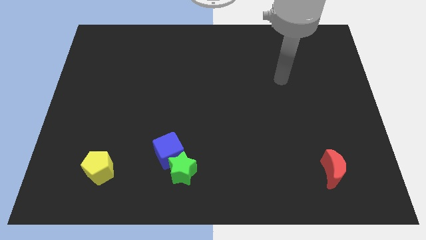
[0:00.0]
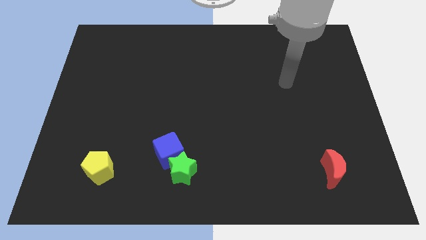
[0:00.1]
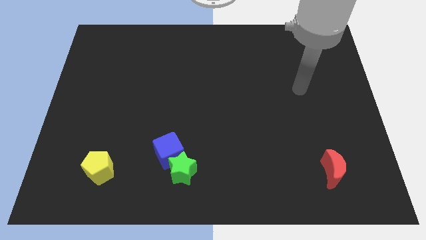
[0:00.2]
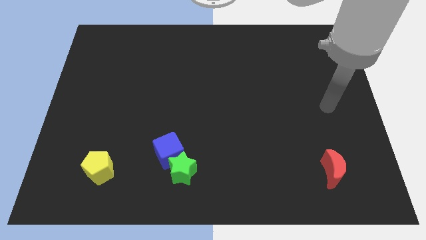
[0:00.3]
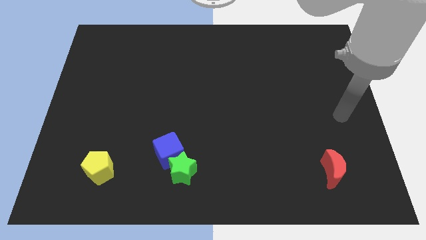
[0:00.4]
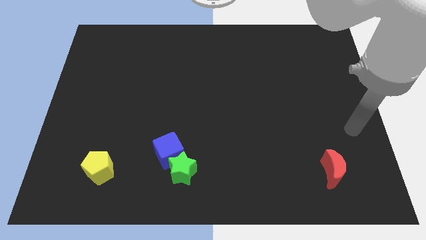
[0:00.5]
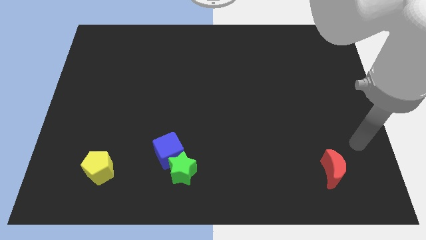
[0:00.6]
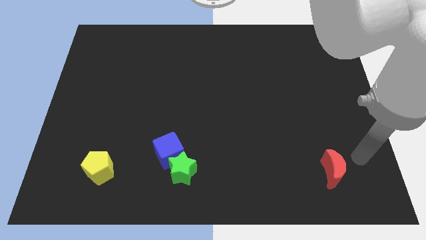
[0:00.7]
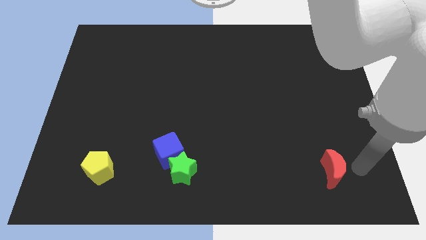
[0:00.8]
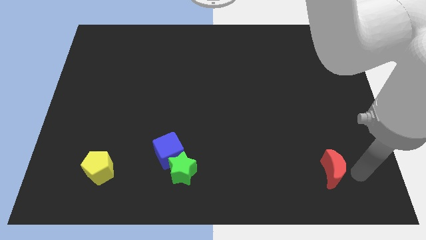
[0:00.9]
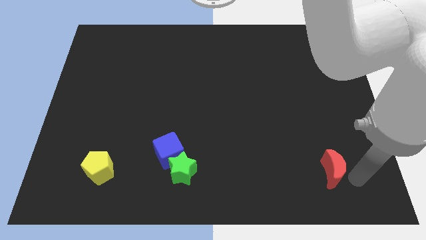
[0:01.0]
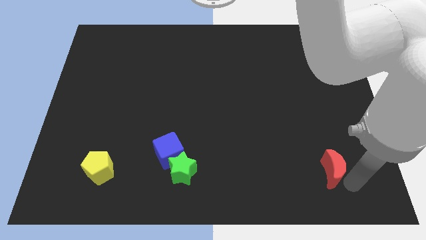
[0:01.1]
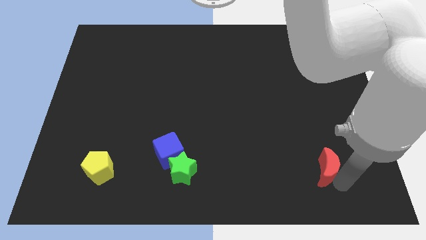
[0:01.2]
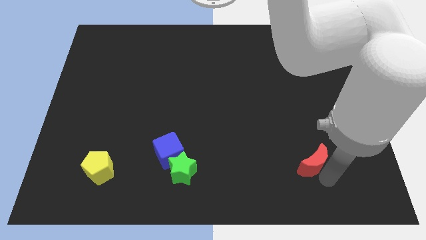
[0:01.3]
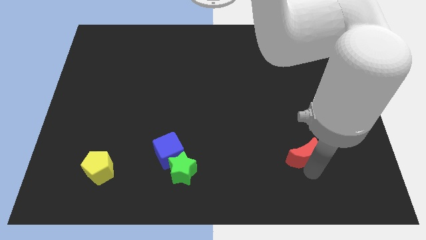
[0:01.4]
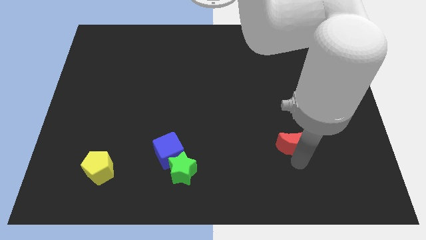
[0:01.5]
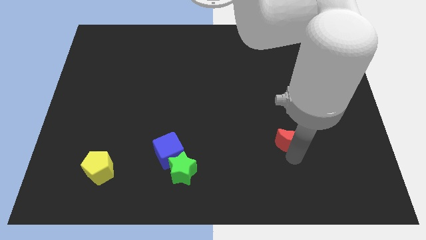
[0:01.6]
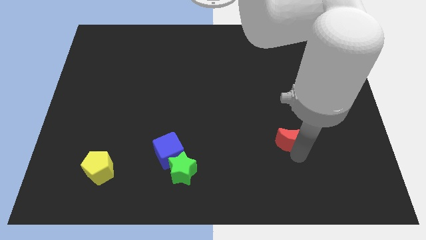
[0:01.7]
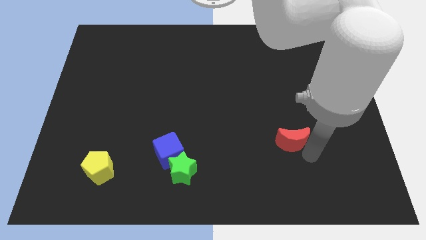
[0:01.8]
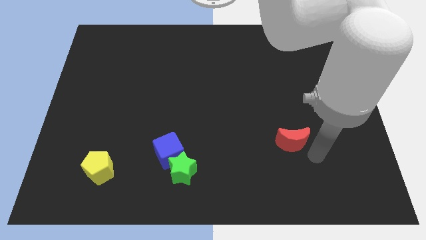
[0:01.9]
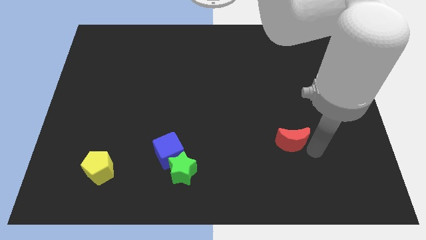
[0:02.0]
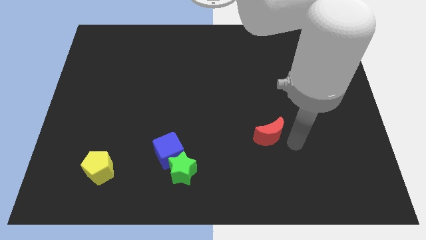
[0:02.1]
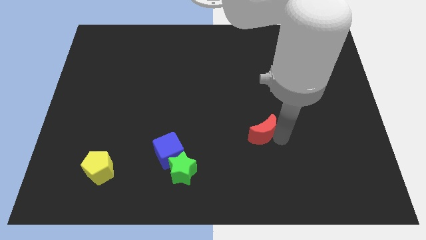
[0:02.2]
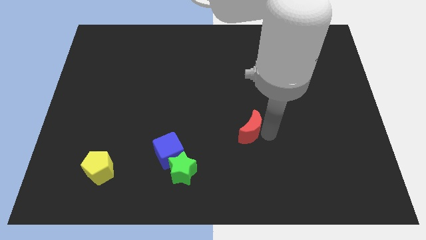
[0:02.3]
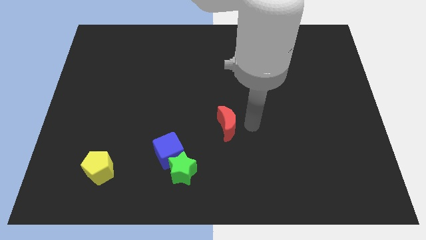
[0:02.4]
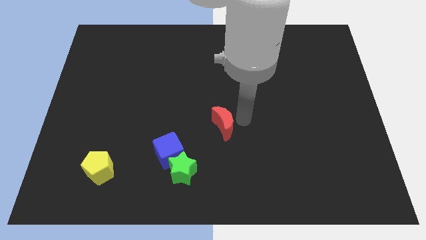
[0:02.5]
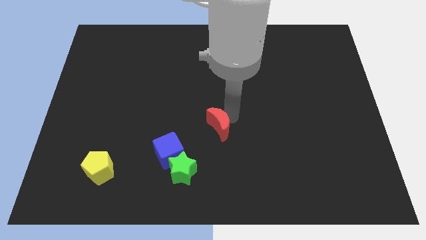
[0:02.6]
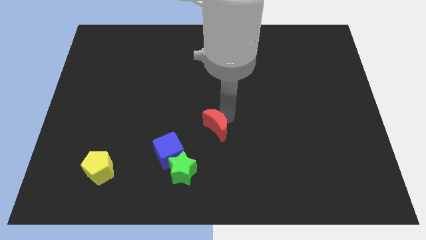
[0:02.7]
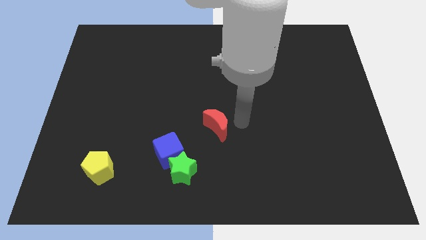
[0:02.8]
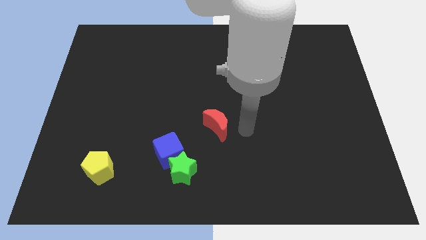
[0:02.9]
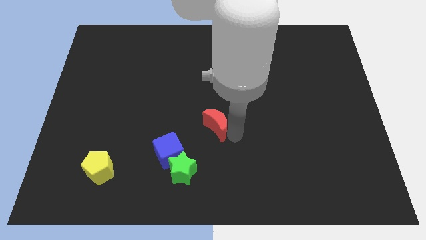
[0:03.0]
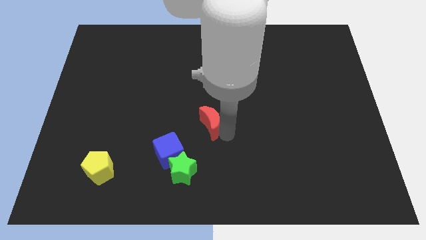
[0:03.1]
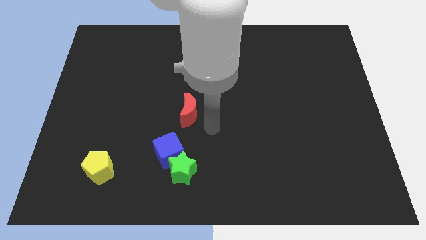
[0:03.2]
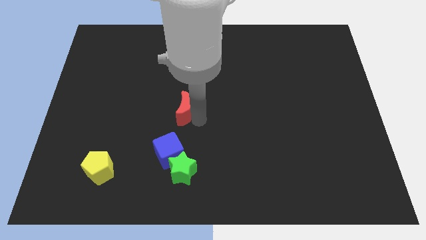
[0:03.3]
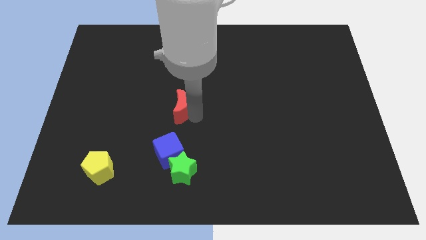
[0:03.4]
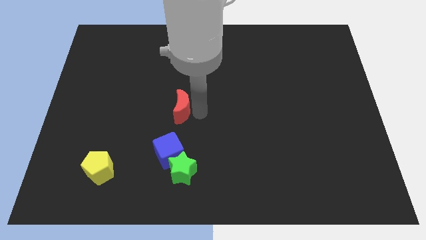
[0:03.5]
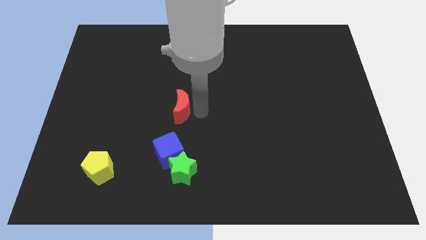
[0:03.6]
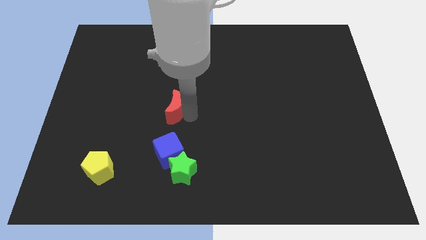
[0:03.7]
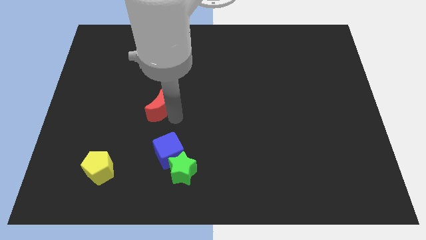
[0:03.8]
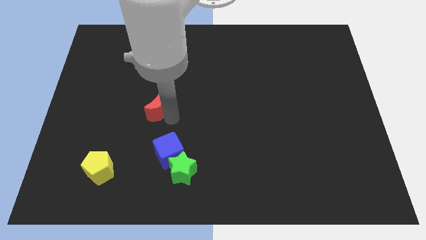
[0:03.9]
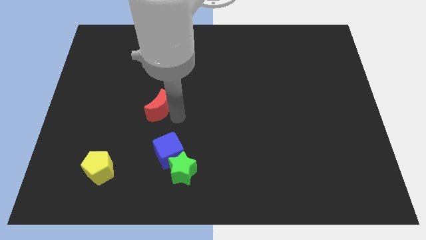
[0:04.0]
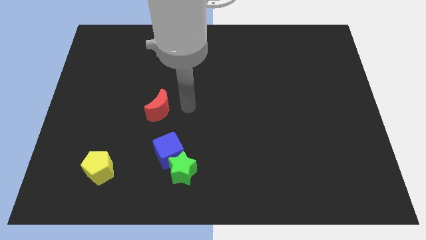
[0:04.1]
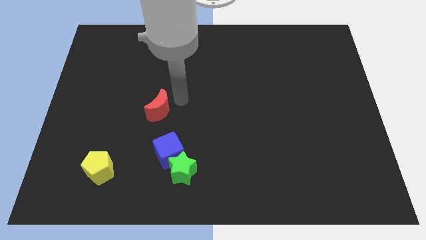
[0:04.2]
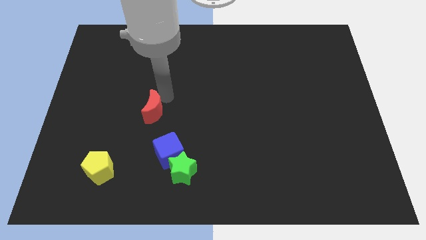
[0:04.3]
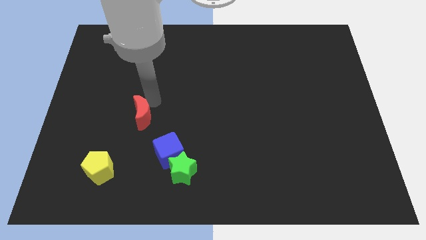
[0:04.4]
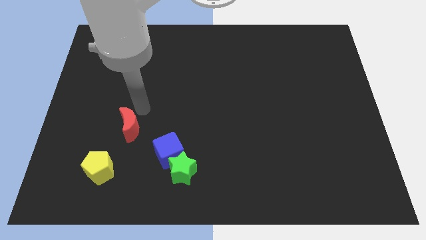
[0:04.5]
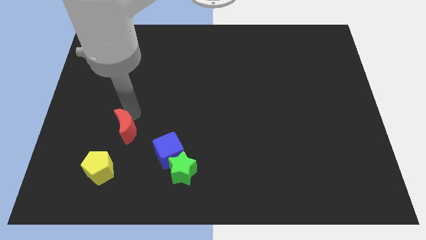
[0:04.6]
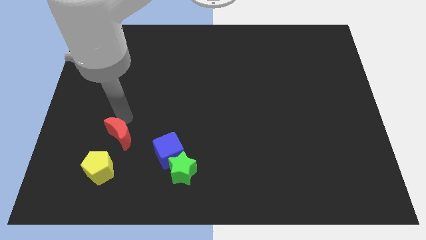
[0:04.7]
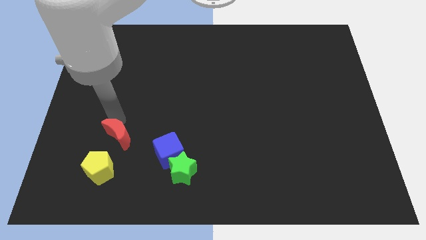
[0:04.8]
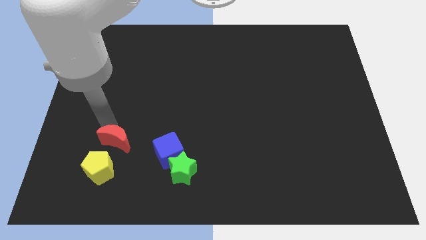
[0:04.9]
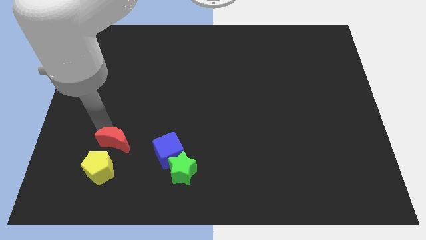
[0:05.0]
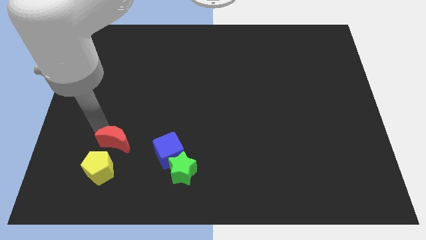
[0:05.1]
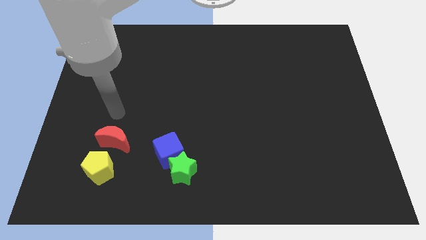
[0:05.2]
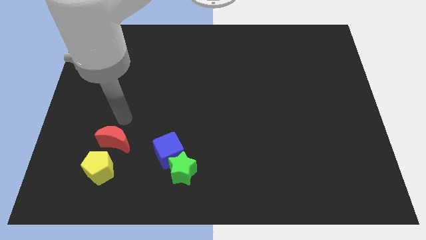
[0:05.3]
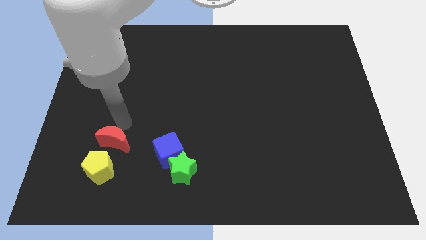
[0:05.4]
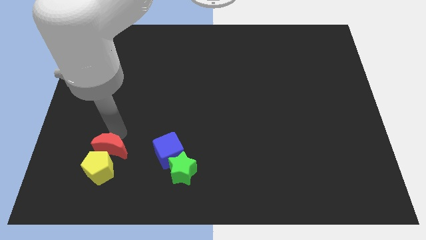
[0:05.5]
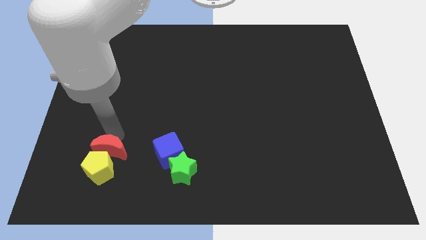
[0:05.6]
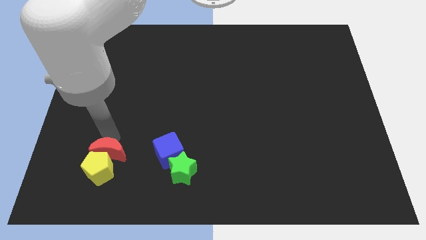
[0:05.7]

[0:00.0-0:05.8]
push the moon towards the yellow block

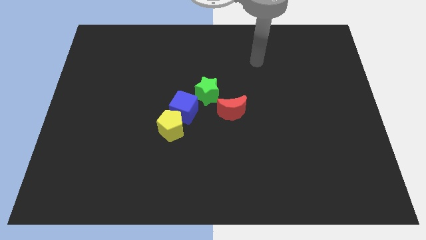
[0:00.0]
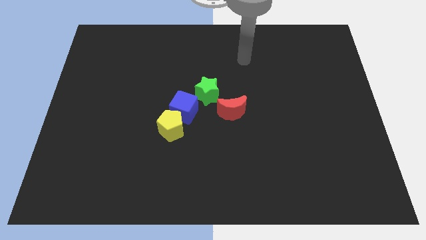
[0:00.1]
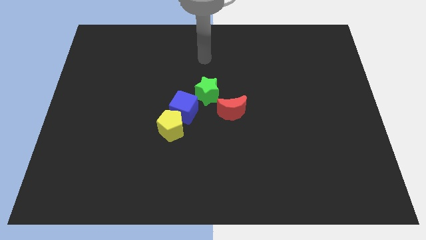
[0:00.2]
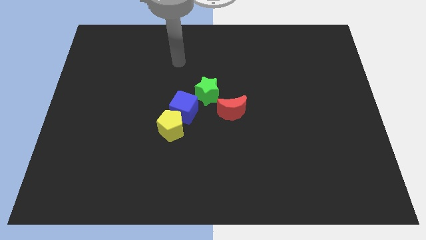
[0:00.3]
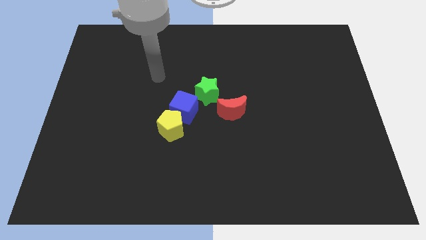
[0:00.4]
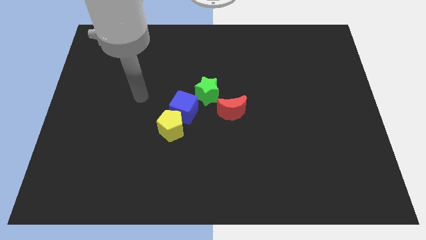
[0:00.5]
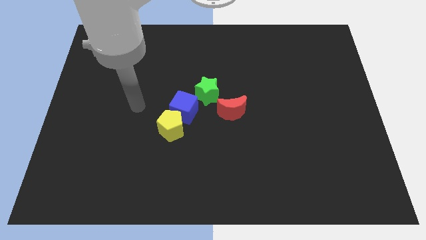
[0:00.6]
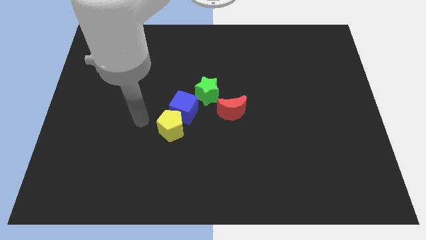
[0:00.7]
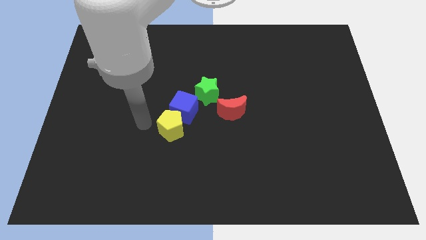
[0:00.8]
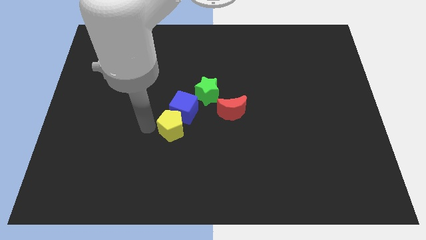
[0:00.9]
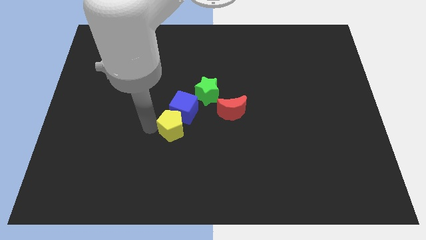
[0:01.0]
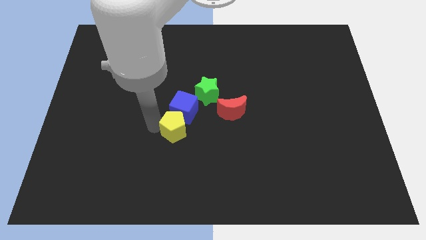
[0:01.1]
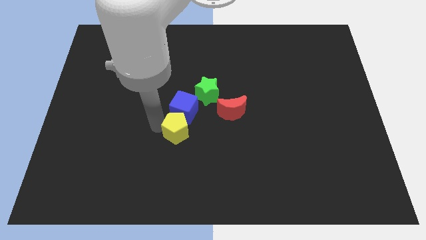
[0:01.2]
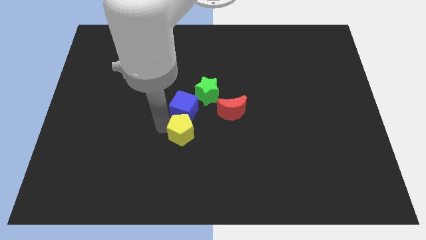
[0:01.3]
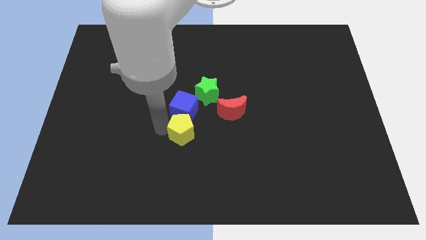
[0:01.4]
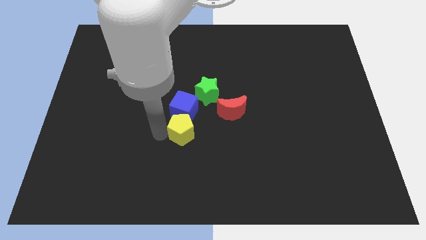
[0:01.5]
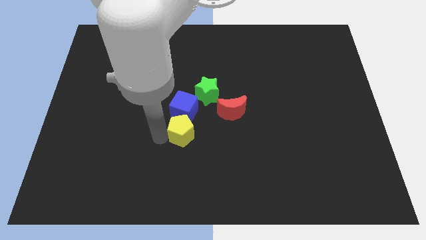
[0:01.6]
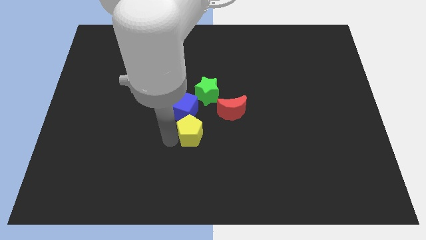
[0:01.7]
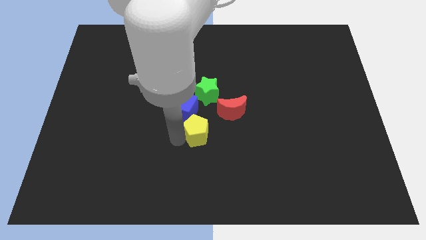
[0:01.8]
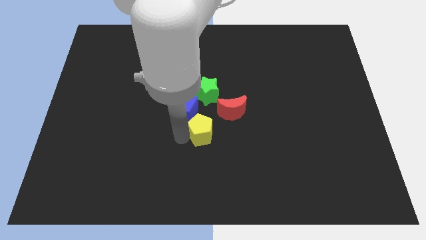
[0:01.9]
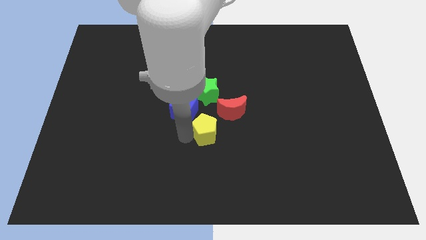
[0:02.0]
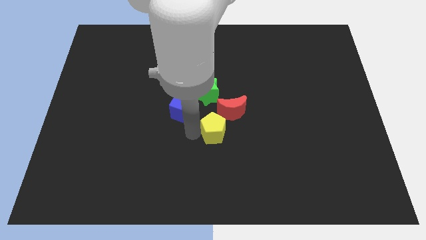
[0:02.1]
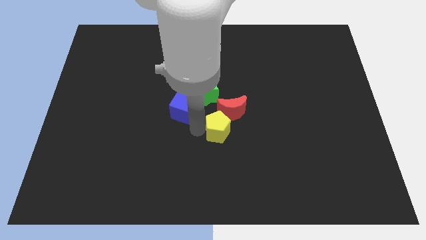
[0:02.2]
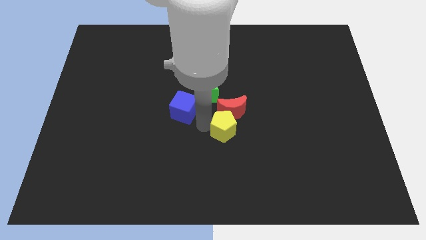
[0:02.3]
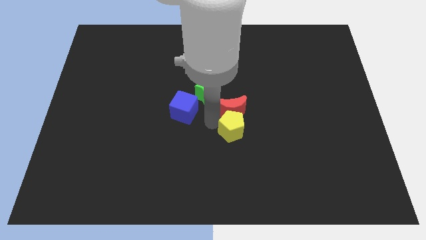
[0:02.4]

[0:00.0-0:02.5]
move the yellow block to the moon
